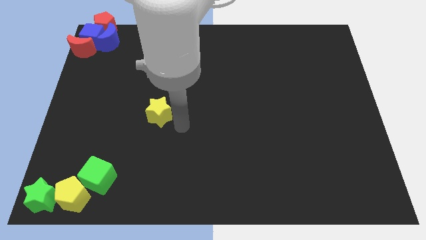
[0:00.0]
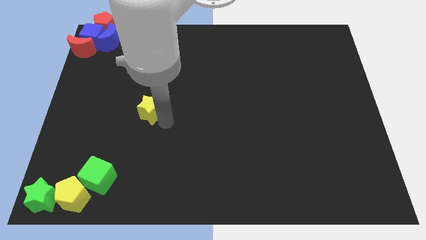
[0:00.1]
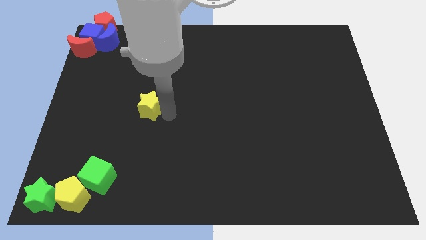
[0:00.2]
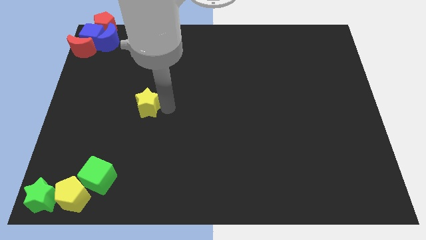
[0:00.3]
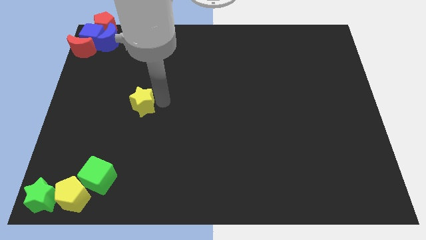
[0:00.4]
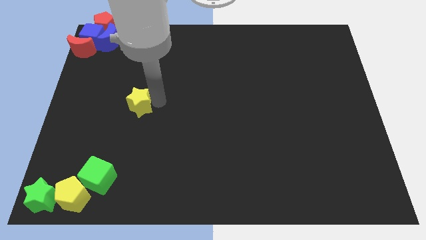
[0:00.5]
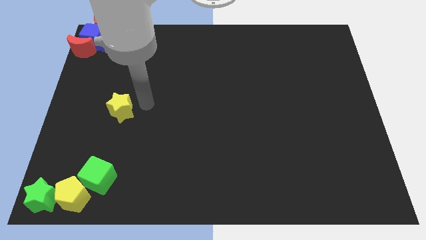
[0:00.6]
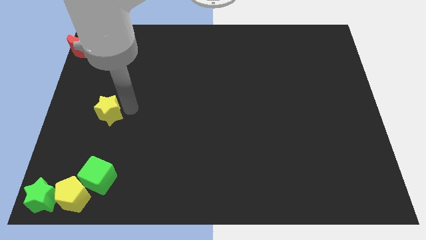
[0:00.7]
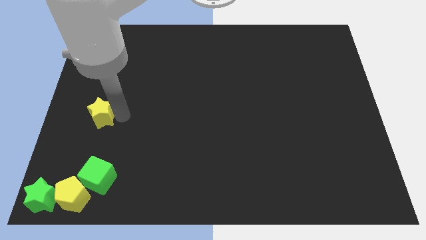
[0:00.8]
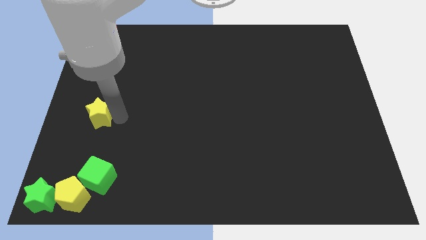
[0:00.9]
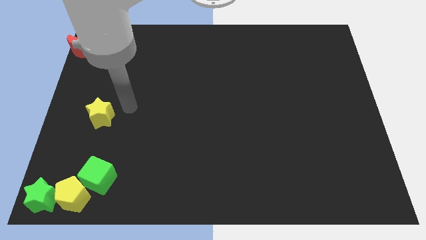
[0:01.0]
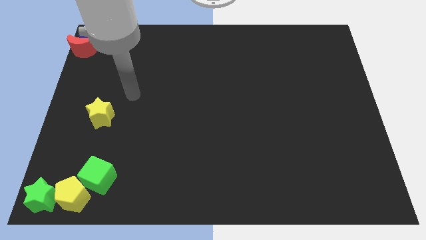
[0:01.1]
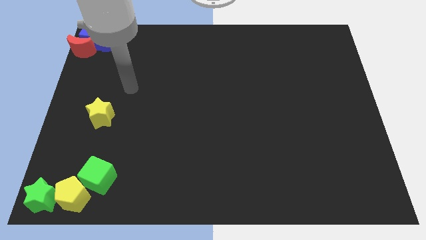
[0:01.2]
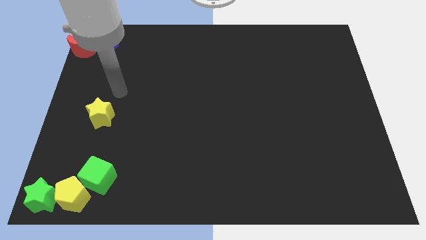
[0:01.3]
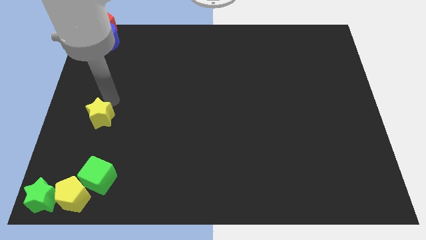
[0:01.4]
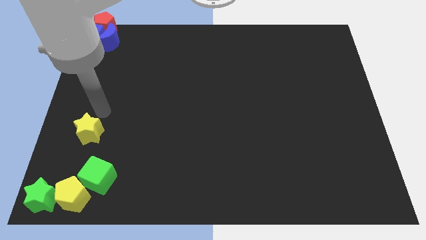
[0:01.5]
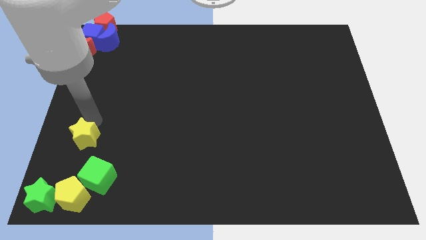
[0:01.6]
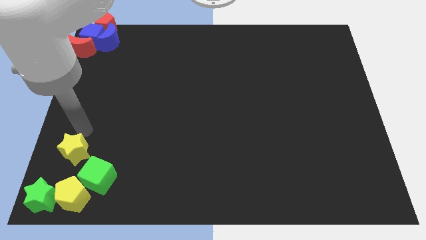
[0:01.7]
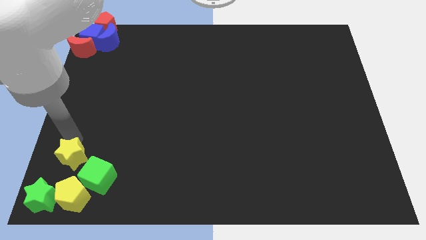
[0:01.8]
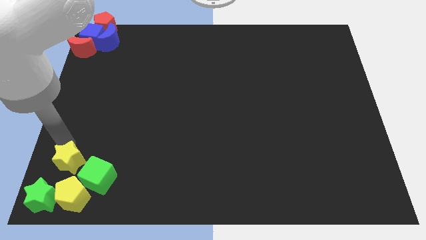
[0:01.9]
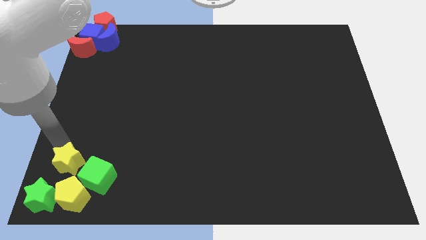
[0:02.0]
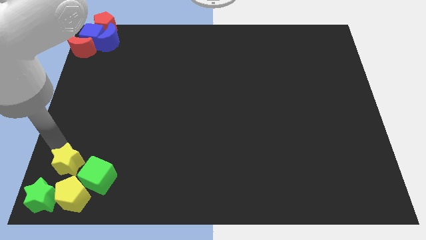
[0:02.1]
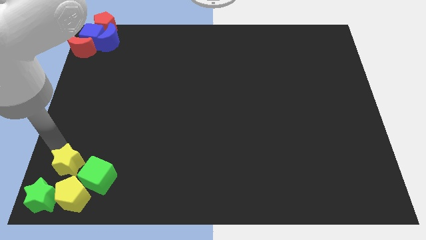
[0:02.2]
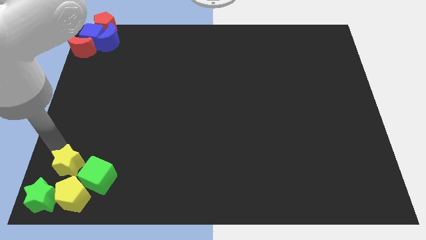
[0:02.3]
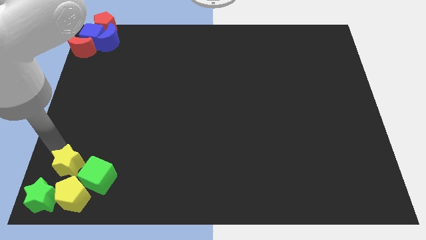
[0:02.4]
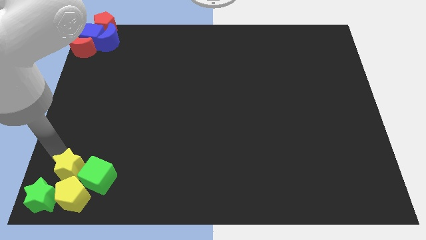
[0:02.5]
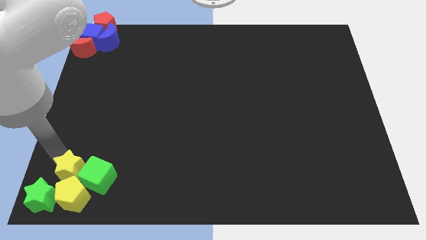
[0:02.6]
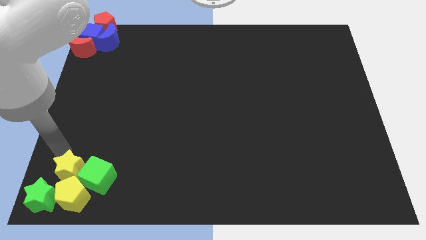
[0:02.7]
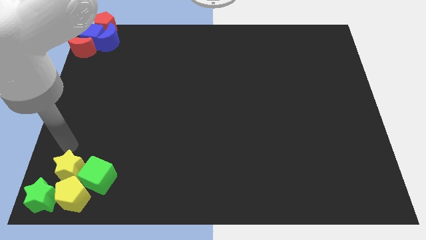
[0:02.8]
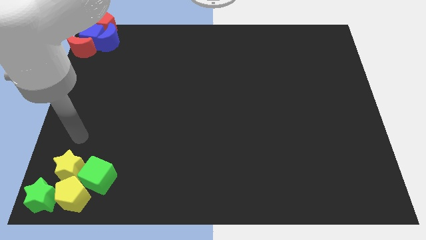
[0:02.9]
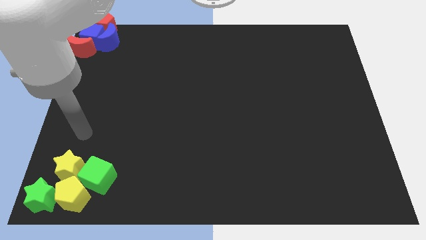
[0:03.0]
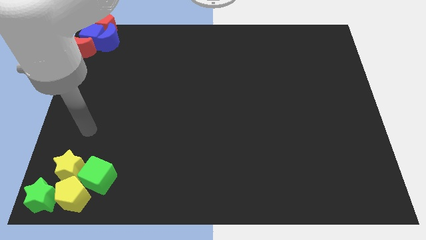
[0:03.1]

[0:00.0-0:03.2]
put the yellow star close to the left side of the green cube

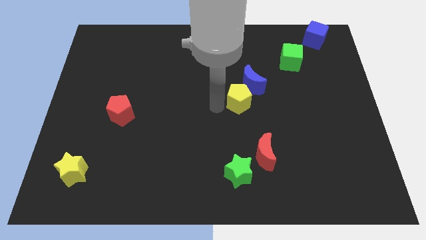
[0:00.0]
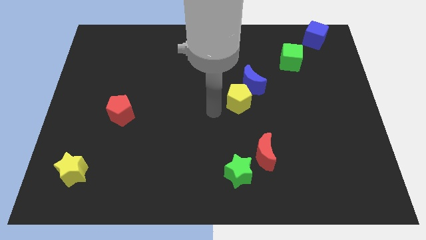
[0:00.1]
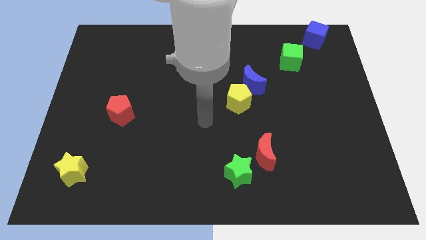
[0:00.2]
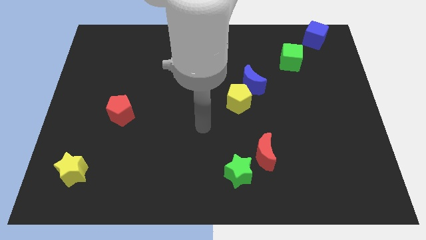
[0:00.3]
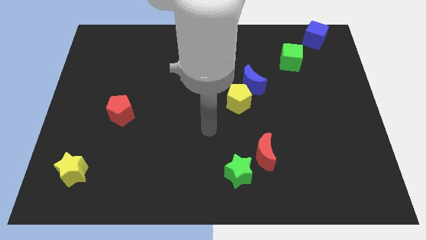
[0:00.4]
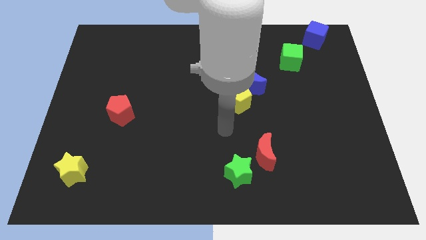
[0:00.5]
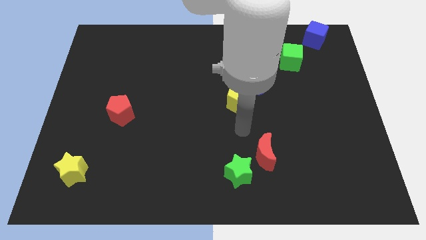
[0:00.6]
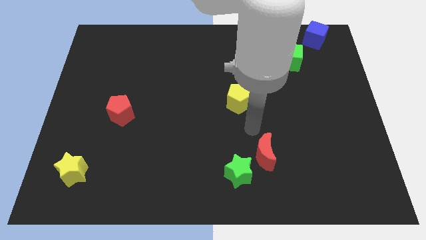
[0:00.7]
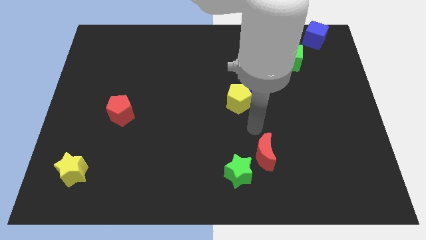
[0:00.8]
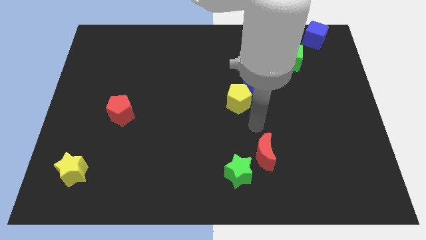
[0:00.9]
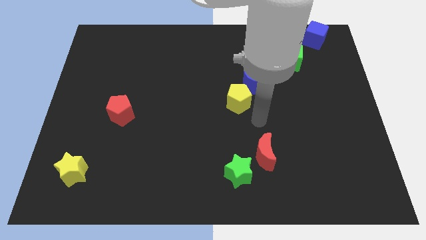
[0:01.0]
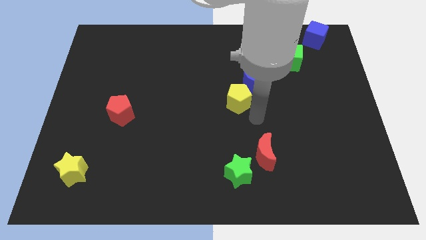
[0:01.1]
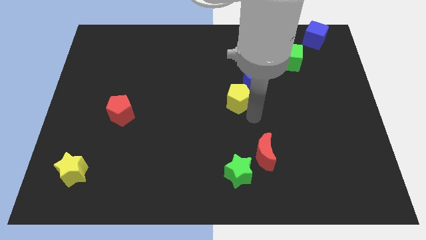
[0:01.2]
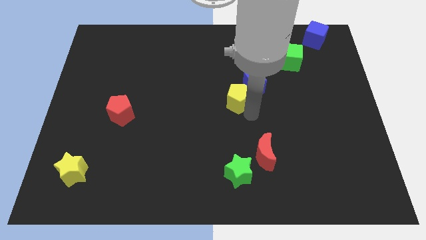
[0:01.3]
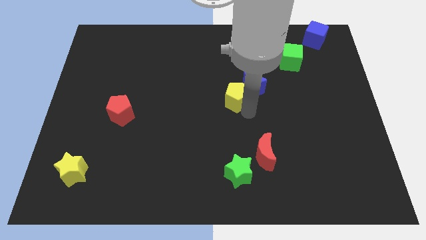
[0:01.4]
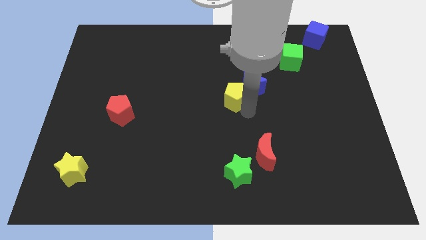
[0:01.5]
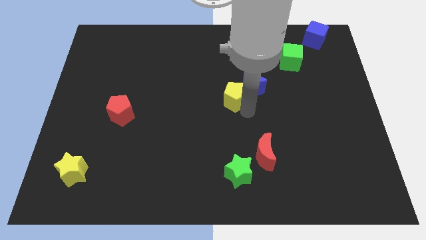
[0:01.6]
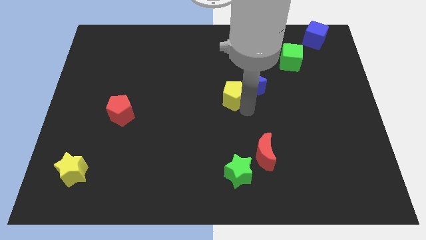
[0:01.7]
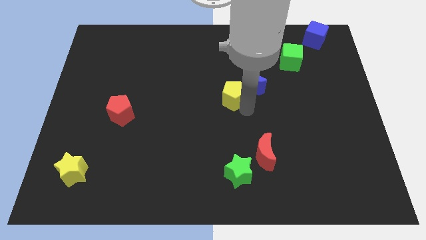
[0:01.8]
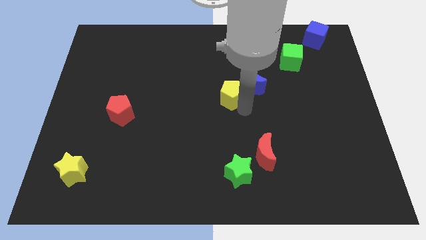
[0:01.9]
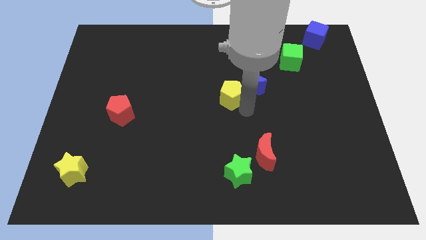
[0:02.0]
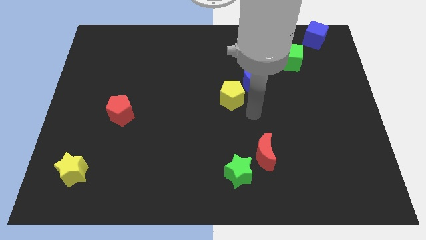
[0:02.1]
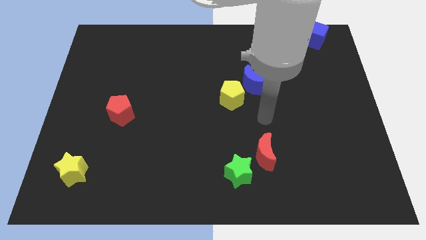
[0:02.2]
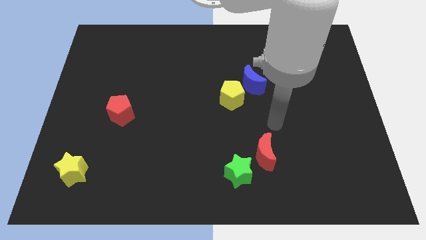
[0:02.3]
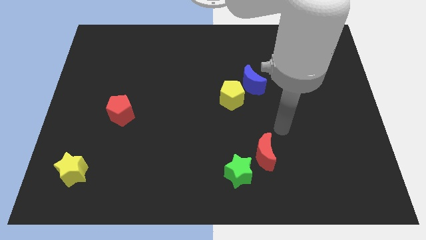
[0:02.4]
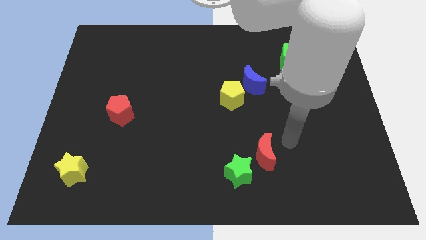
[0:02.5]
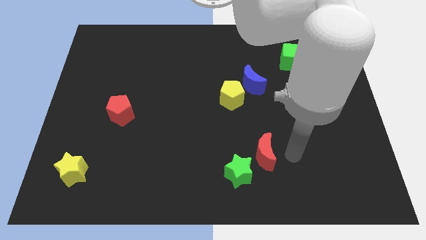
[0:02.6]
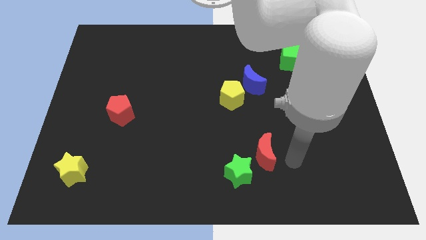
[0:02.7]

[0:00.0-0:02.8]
adjust the yellow pentagon at the bottom and move away

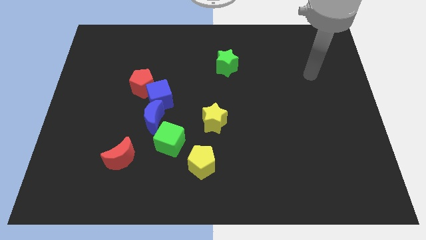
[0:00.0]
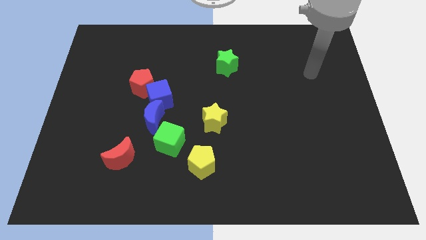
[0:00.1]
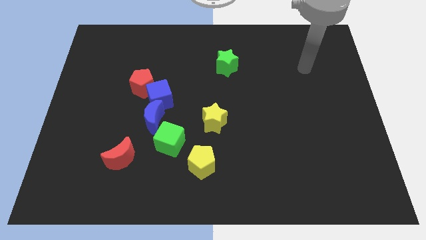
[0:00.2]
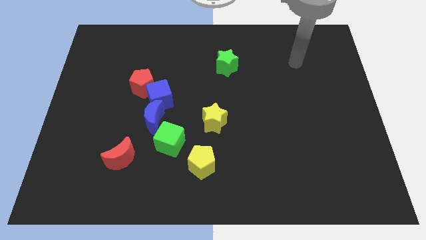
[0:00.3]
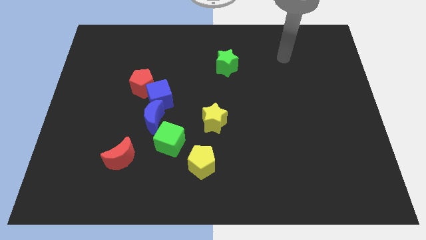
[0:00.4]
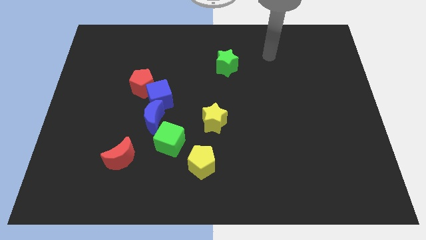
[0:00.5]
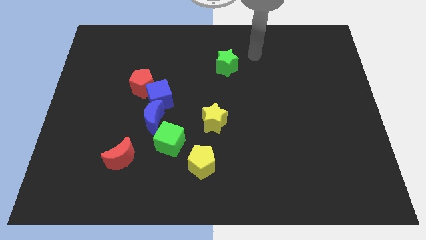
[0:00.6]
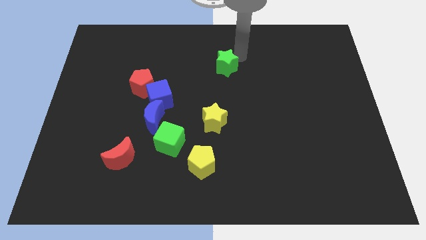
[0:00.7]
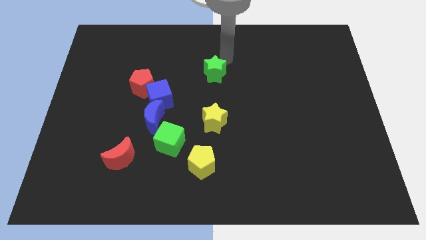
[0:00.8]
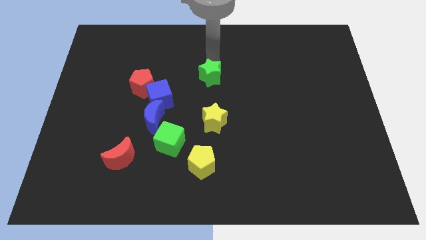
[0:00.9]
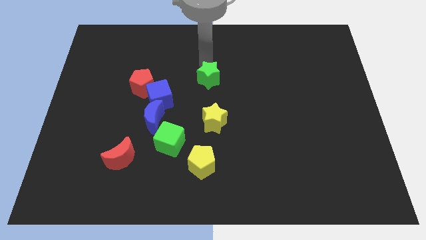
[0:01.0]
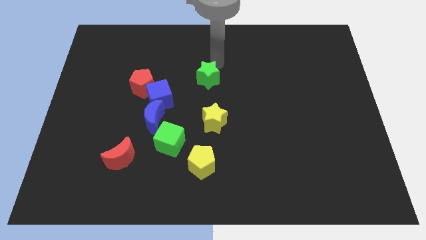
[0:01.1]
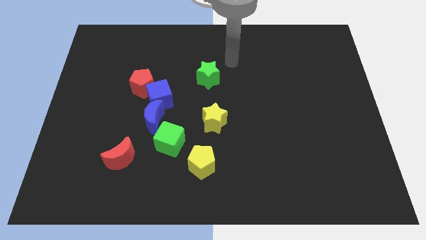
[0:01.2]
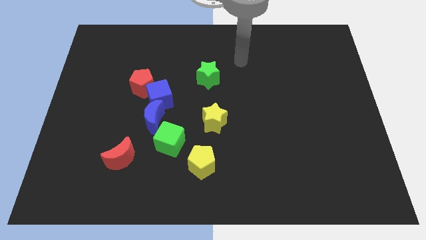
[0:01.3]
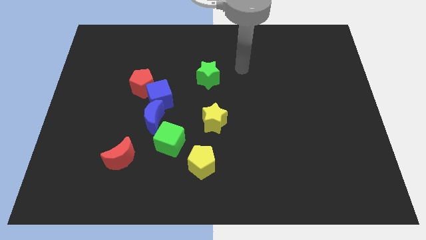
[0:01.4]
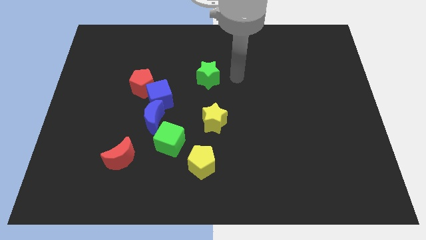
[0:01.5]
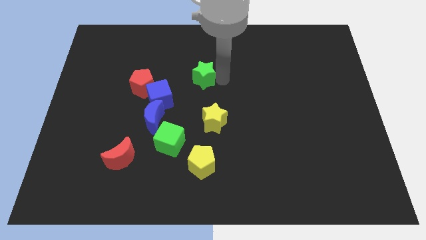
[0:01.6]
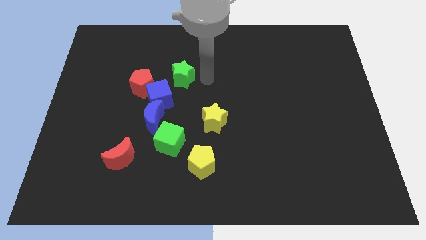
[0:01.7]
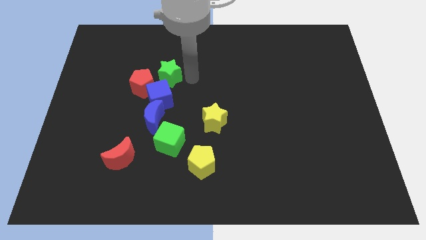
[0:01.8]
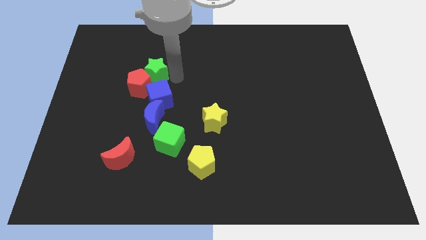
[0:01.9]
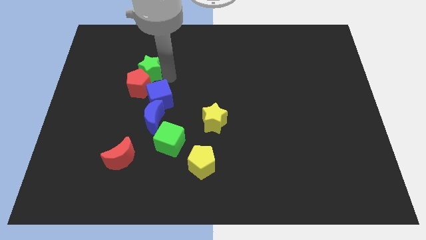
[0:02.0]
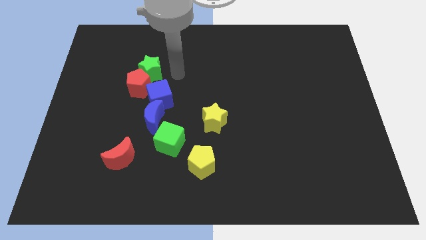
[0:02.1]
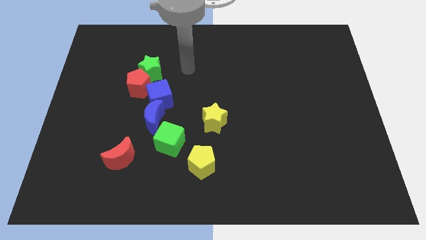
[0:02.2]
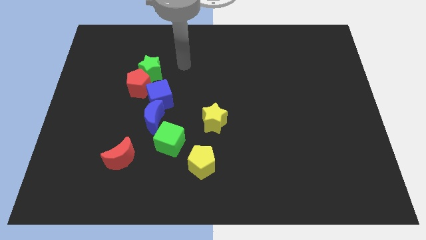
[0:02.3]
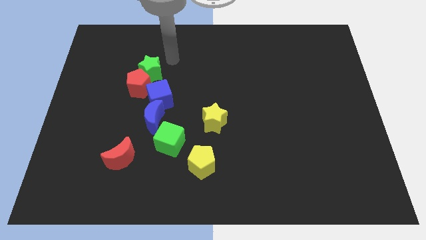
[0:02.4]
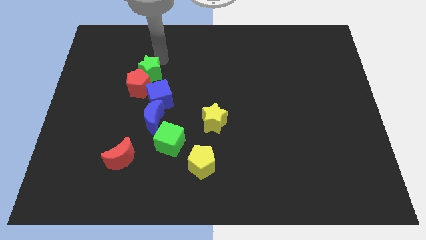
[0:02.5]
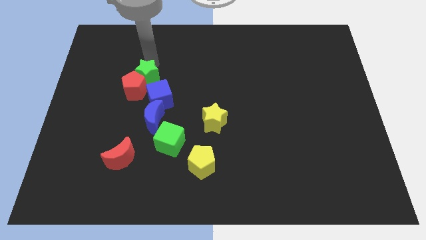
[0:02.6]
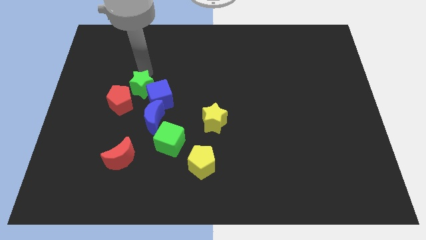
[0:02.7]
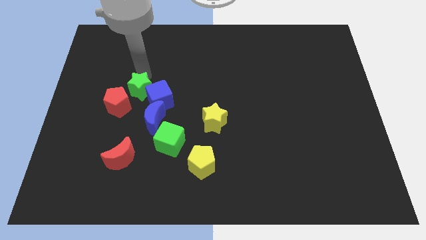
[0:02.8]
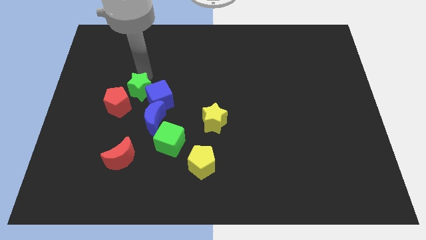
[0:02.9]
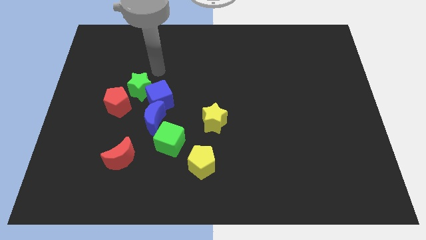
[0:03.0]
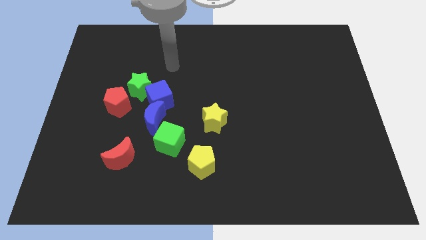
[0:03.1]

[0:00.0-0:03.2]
push the green star and the red pentagon towards the center left of the board
